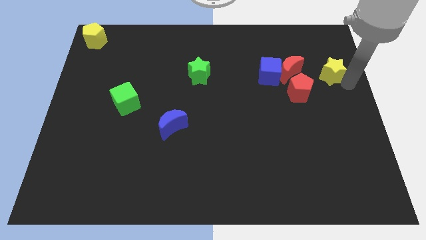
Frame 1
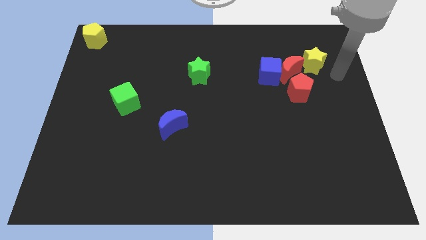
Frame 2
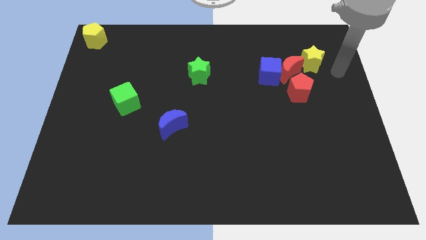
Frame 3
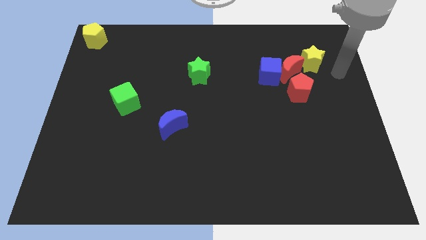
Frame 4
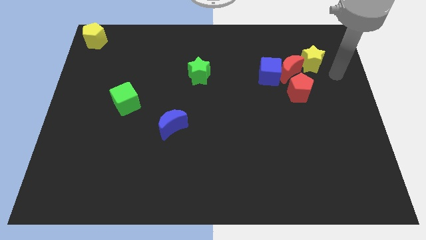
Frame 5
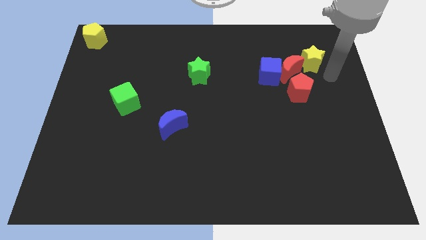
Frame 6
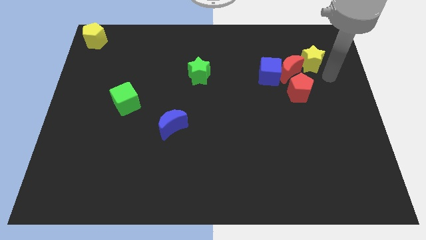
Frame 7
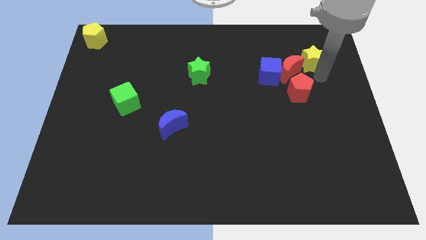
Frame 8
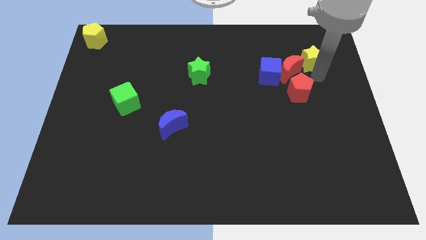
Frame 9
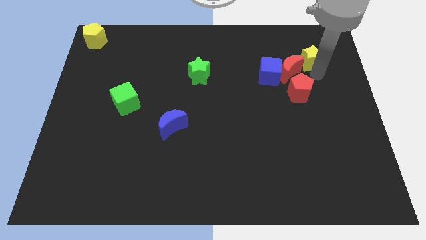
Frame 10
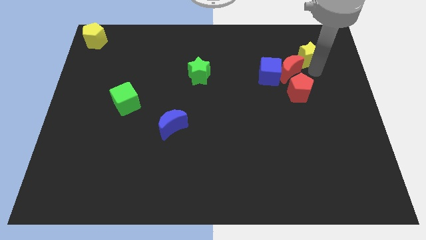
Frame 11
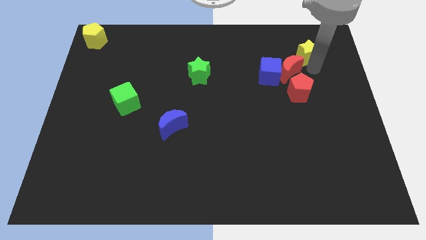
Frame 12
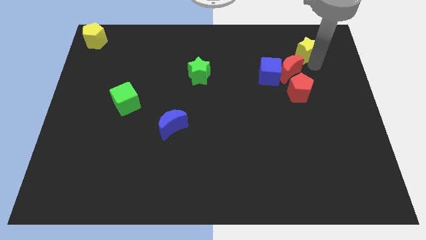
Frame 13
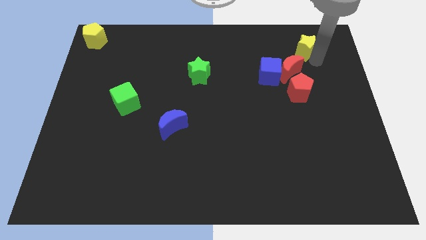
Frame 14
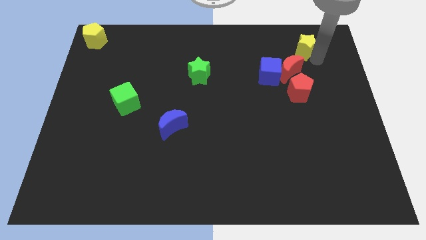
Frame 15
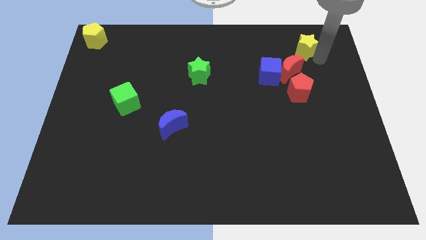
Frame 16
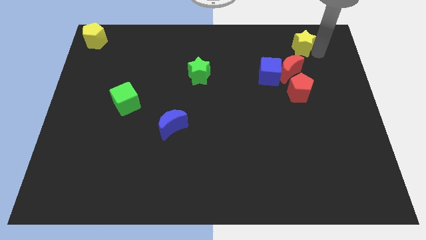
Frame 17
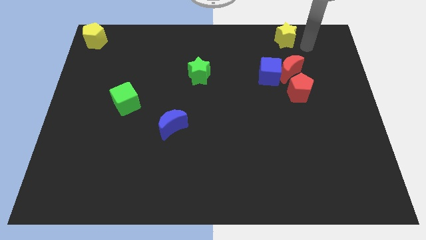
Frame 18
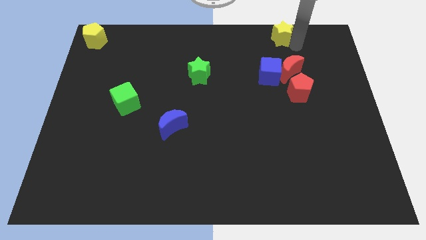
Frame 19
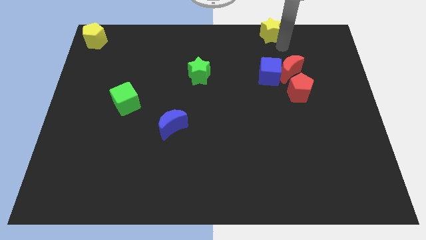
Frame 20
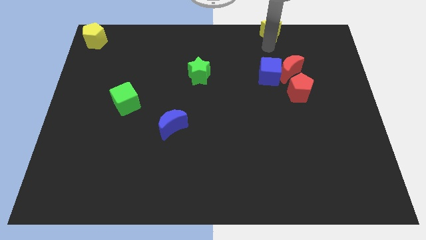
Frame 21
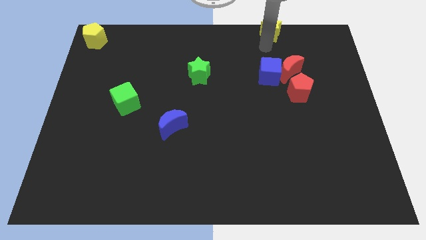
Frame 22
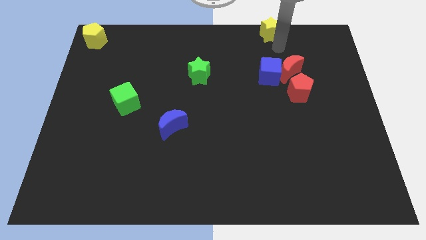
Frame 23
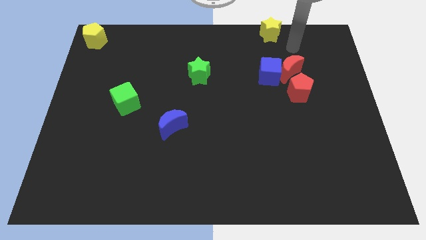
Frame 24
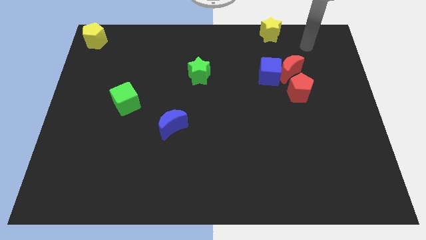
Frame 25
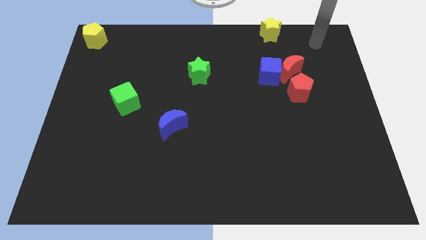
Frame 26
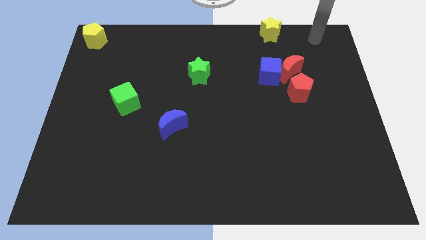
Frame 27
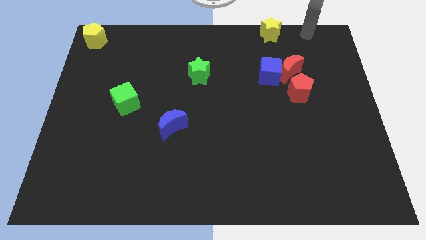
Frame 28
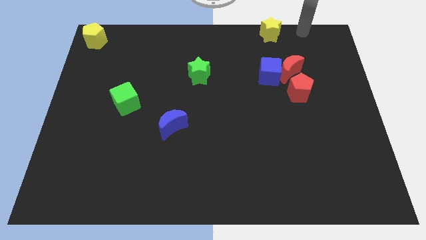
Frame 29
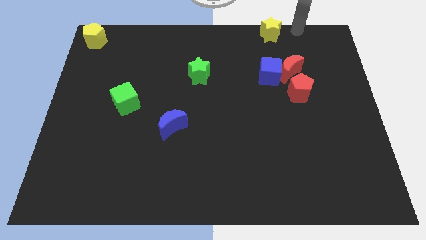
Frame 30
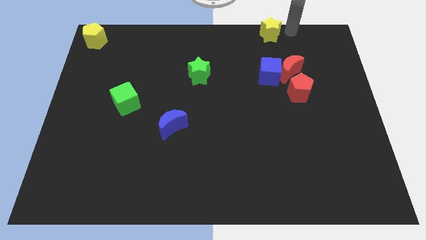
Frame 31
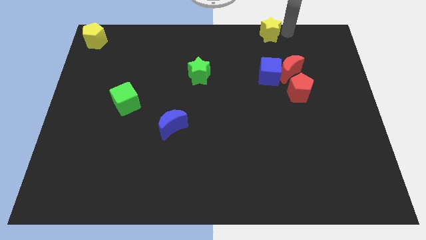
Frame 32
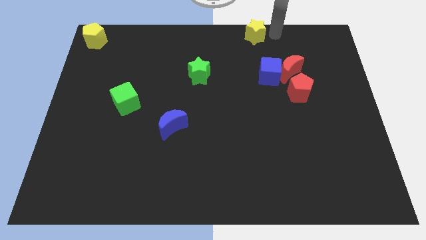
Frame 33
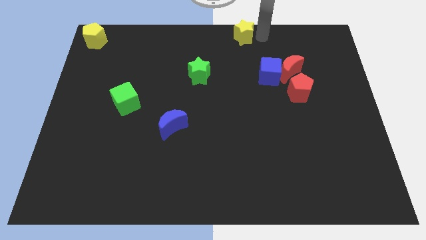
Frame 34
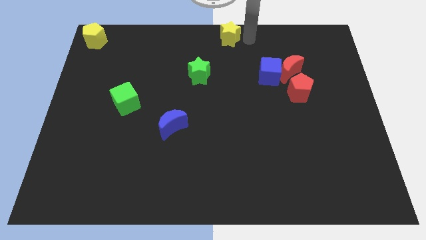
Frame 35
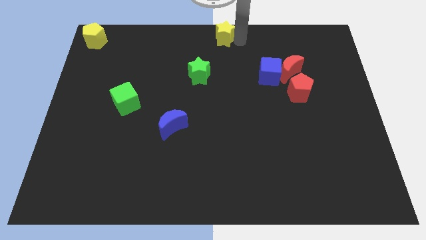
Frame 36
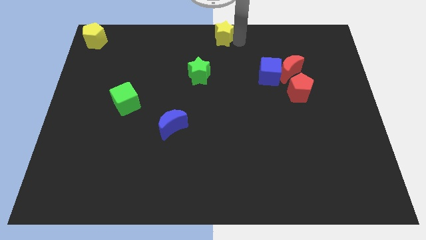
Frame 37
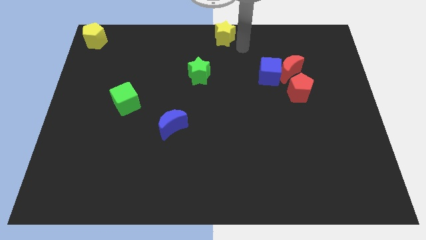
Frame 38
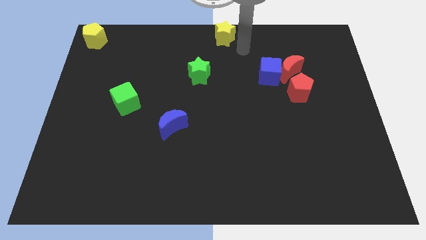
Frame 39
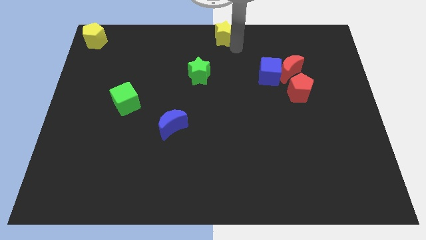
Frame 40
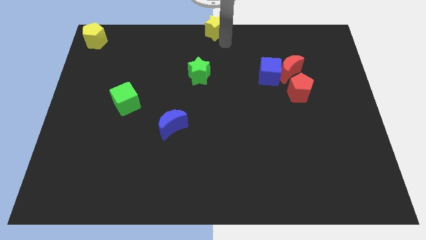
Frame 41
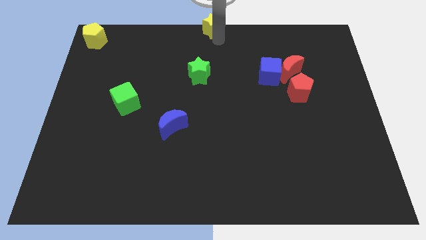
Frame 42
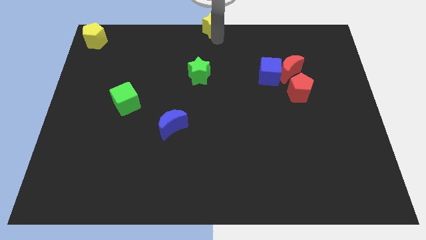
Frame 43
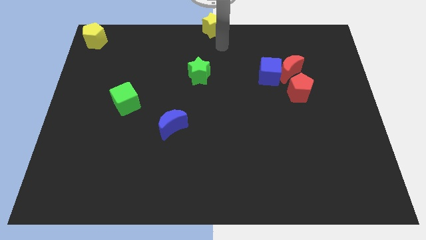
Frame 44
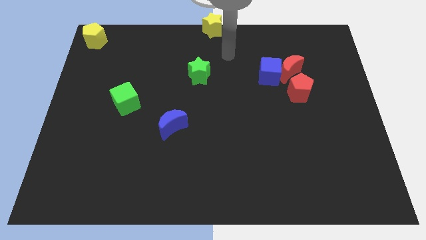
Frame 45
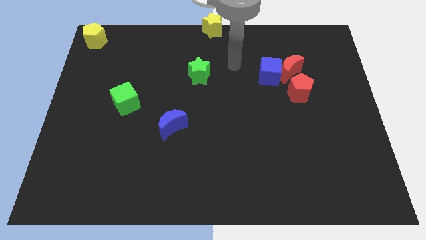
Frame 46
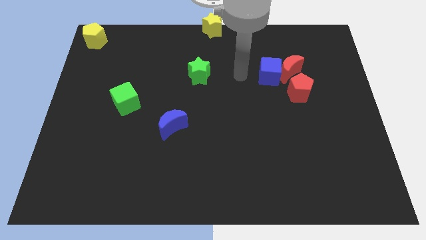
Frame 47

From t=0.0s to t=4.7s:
place the yellow star at the top center of the board

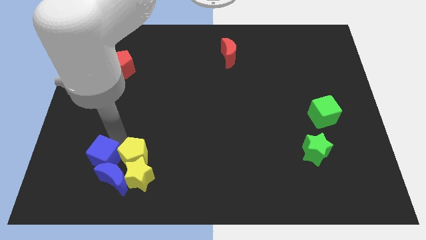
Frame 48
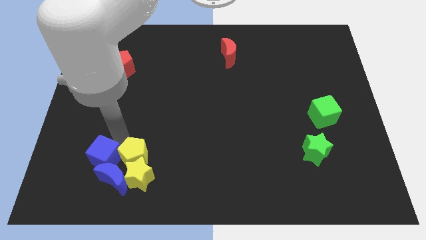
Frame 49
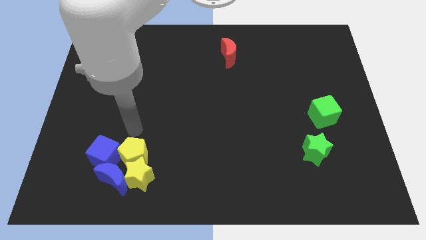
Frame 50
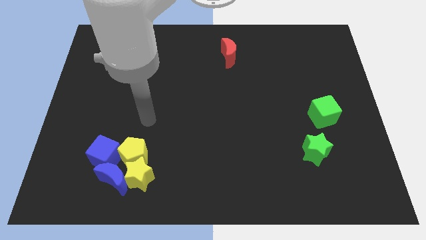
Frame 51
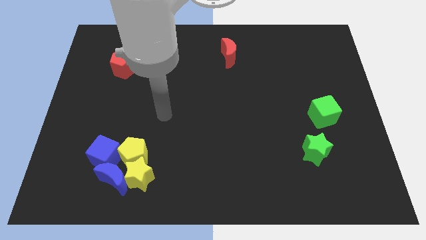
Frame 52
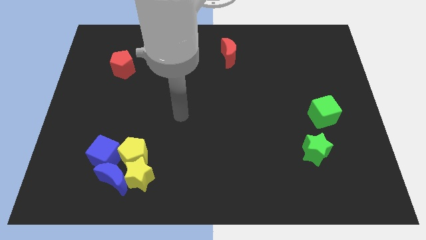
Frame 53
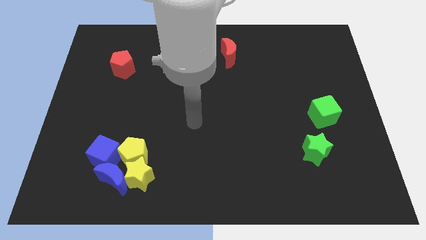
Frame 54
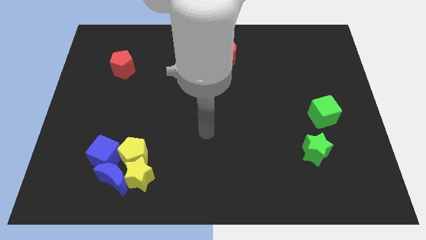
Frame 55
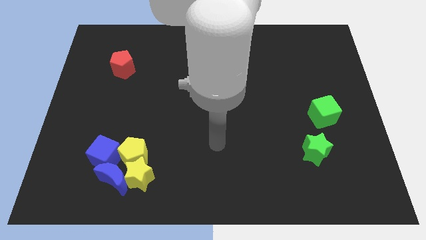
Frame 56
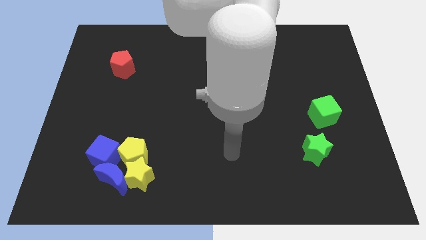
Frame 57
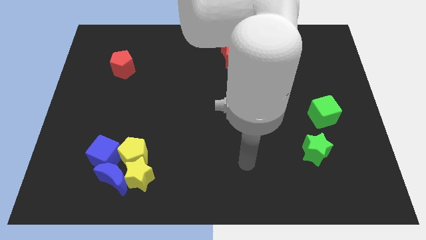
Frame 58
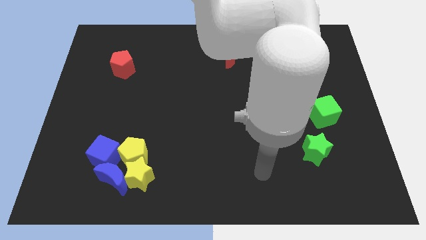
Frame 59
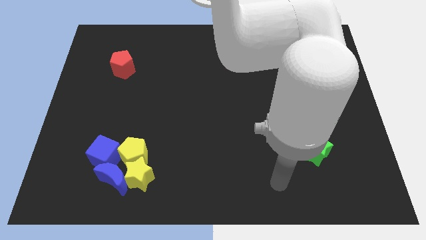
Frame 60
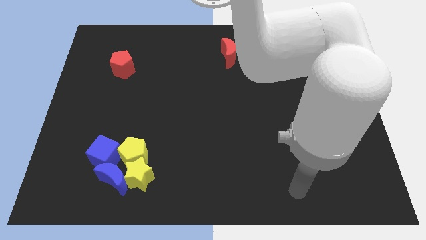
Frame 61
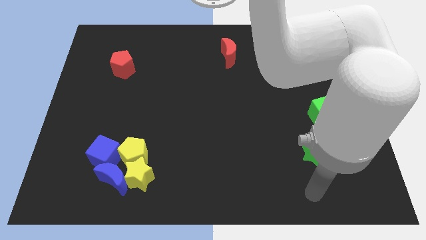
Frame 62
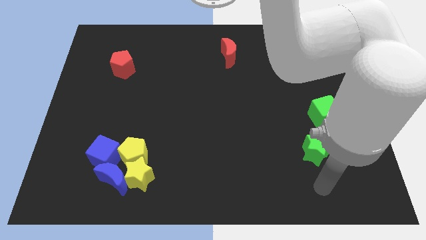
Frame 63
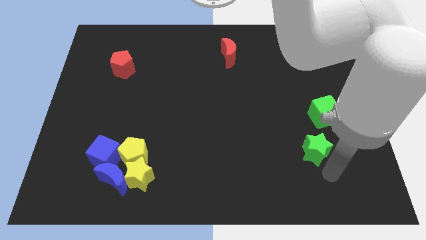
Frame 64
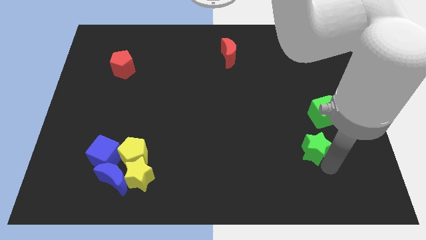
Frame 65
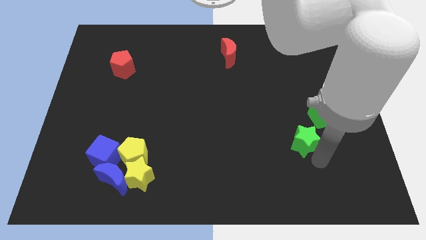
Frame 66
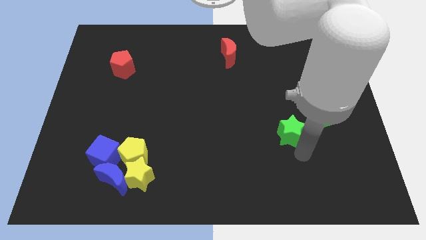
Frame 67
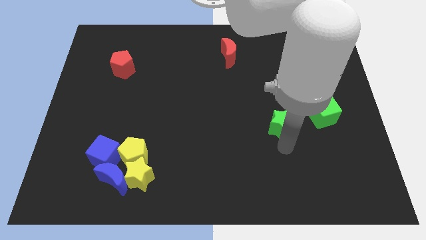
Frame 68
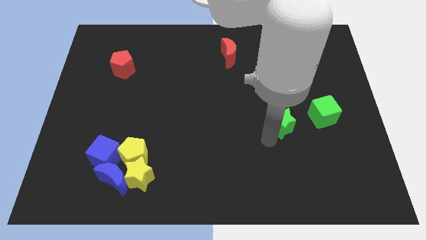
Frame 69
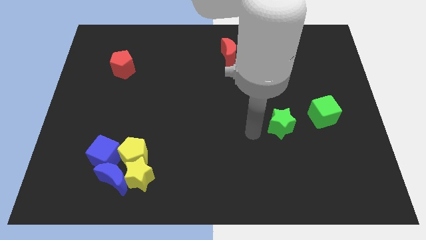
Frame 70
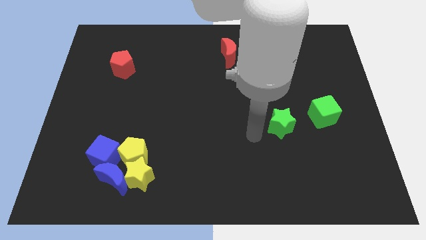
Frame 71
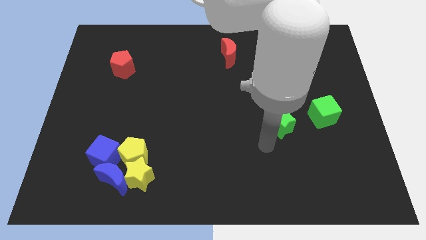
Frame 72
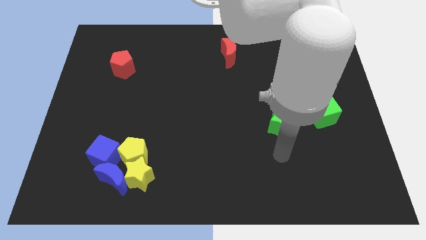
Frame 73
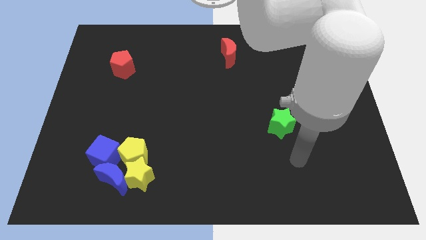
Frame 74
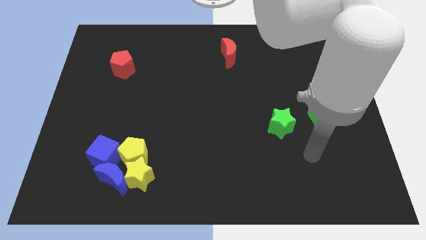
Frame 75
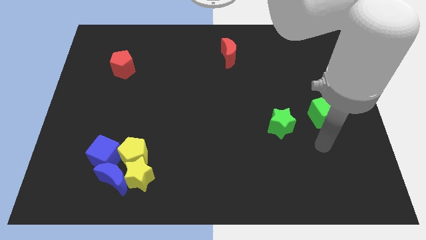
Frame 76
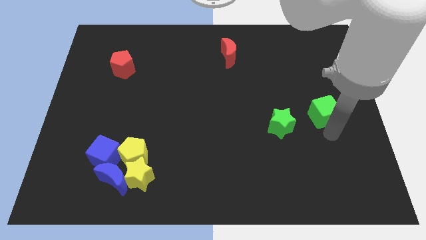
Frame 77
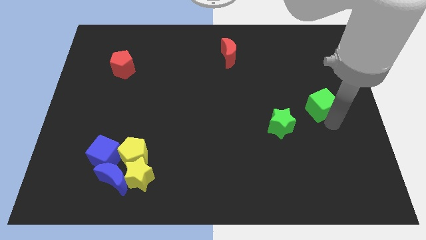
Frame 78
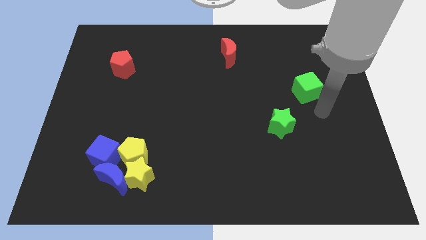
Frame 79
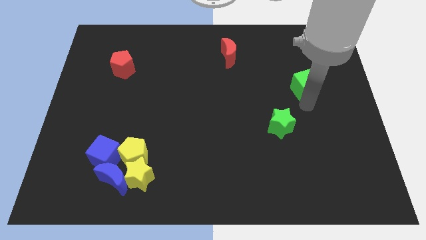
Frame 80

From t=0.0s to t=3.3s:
push the green cube to the top right of the green star

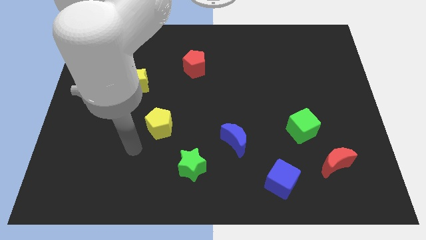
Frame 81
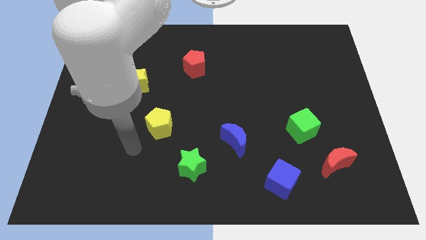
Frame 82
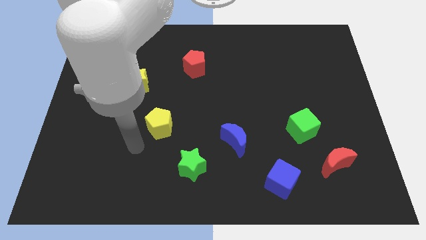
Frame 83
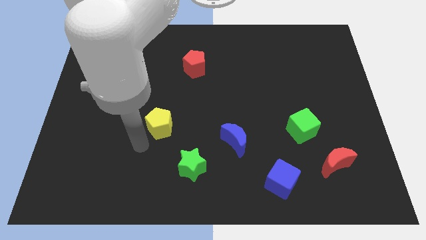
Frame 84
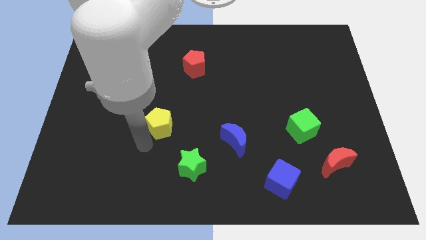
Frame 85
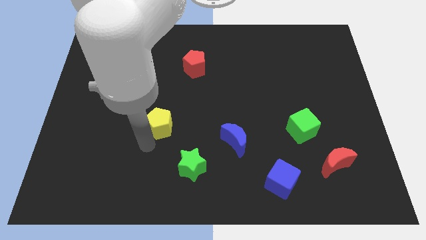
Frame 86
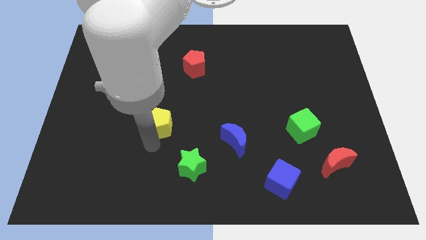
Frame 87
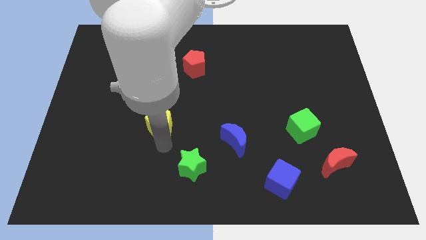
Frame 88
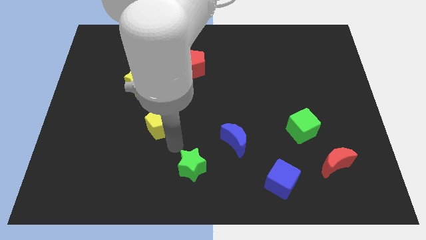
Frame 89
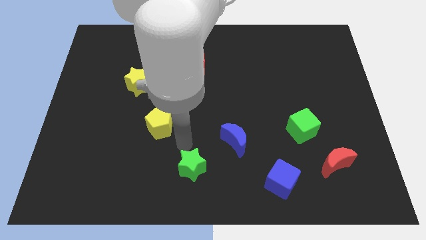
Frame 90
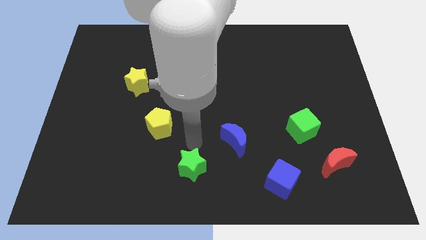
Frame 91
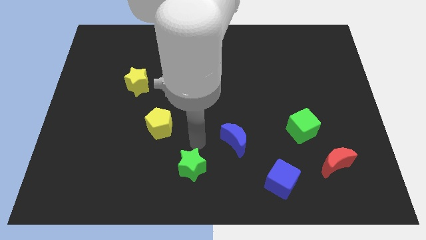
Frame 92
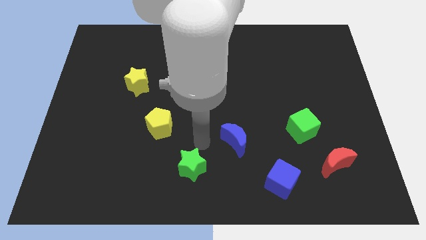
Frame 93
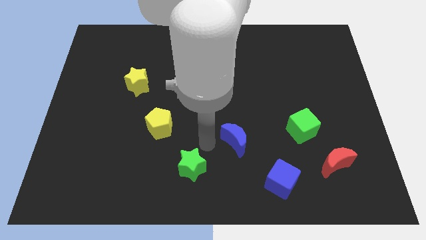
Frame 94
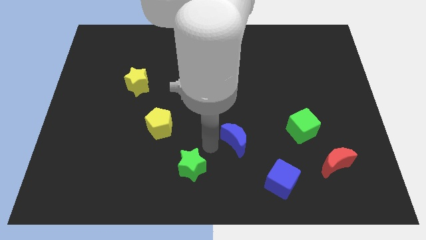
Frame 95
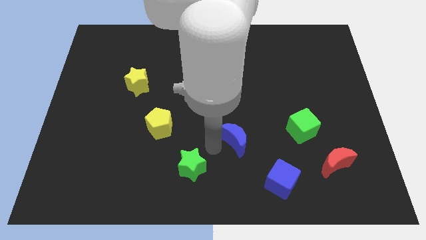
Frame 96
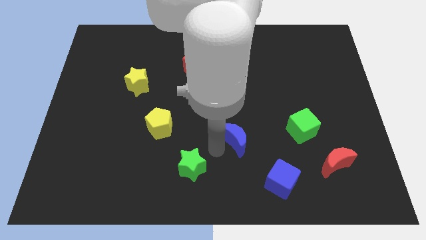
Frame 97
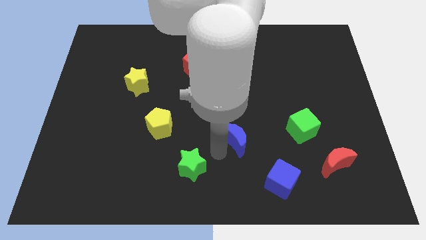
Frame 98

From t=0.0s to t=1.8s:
move your arm towards blue crescent
